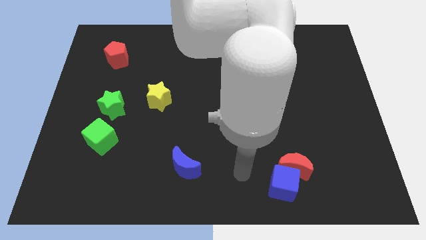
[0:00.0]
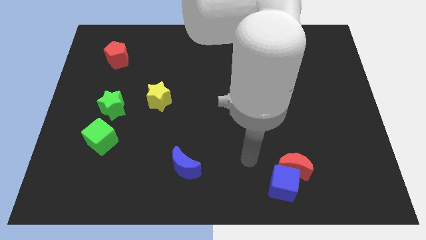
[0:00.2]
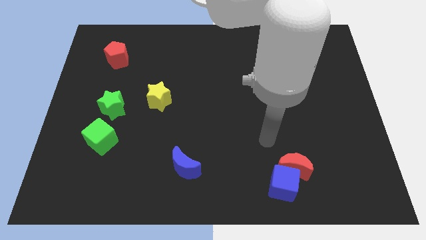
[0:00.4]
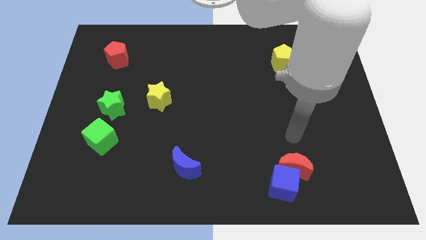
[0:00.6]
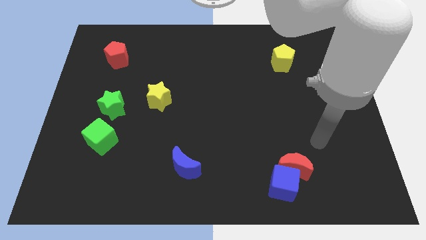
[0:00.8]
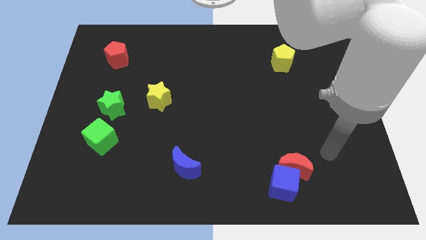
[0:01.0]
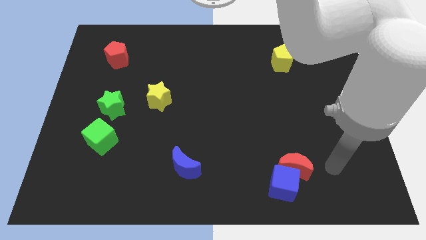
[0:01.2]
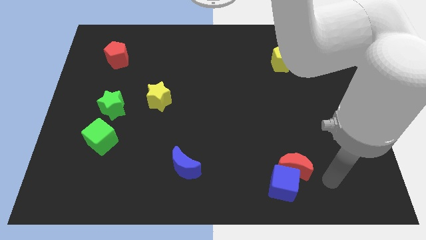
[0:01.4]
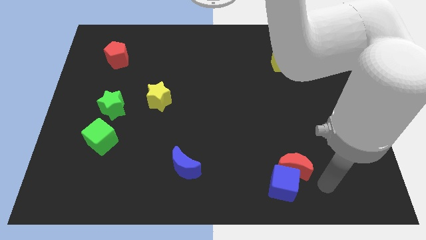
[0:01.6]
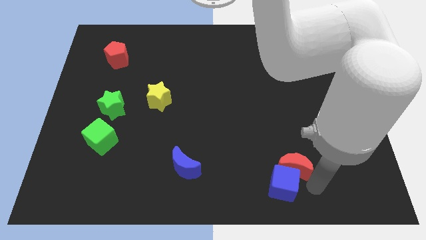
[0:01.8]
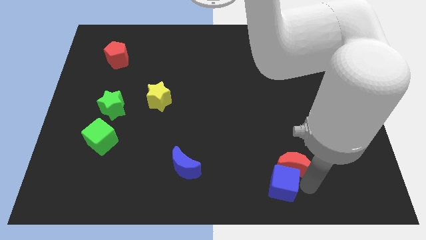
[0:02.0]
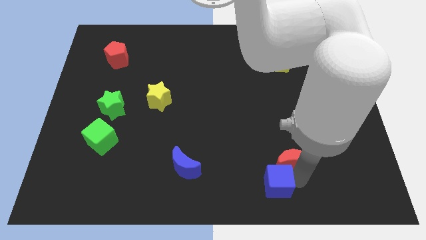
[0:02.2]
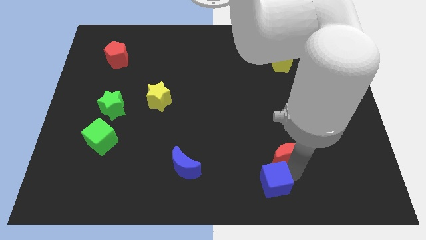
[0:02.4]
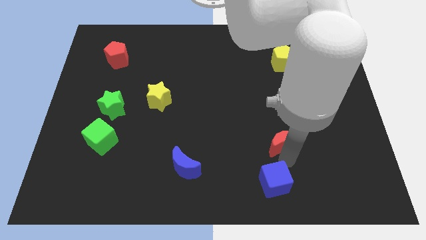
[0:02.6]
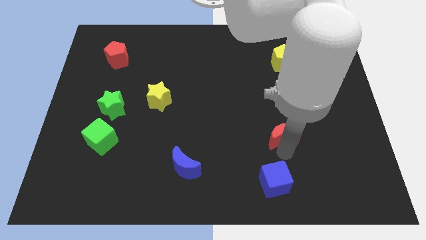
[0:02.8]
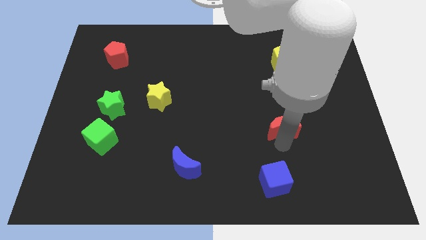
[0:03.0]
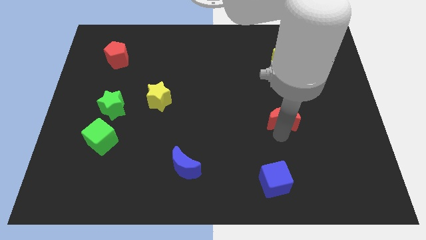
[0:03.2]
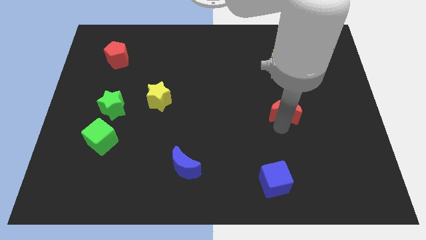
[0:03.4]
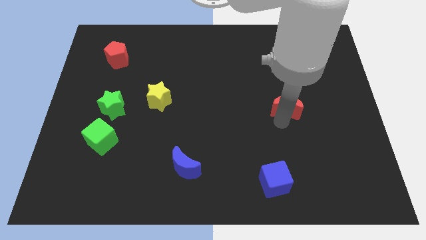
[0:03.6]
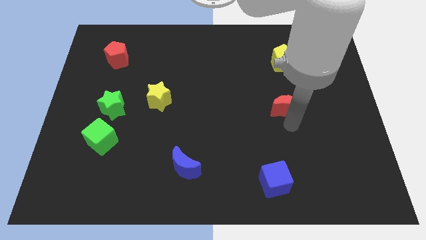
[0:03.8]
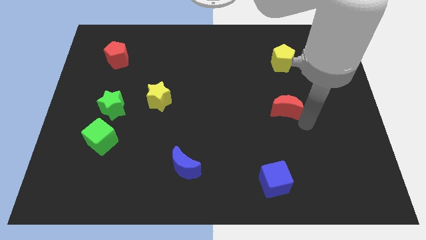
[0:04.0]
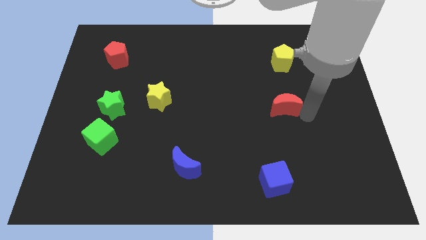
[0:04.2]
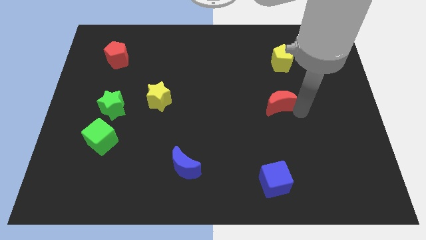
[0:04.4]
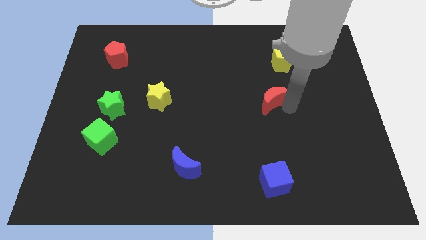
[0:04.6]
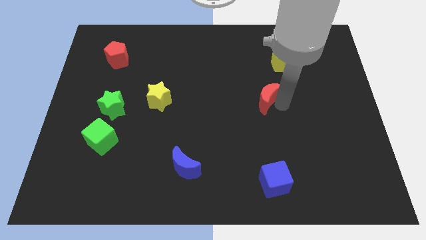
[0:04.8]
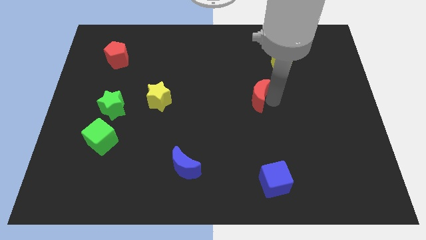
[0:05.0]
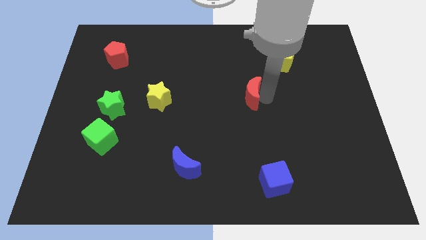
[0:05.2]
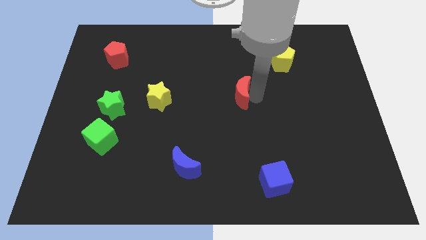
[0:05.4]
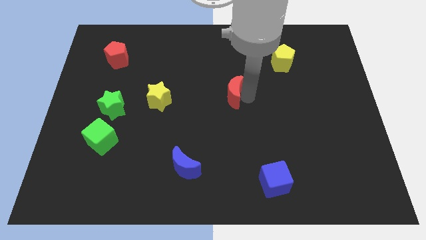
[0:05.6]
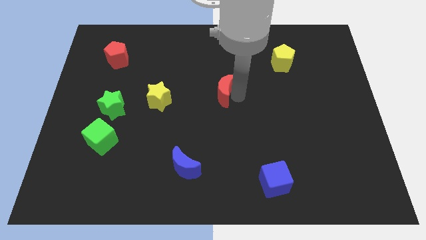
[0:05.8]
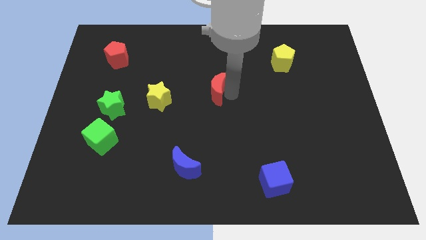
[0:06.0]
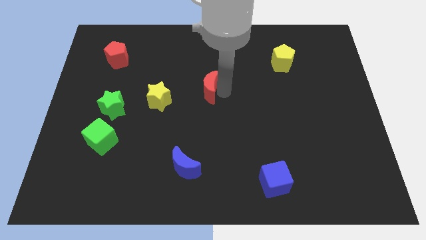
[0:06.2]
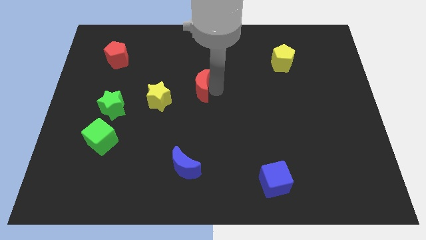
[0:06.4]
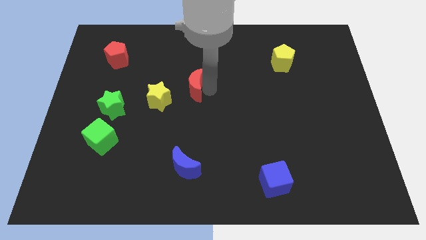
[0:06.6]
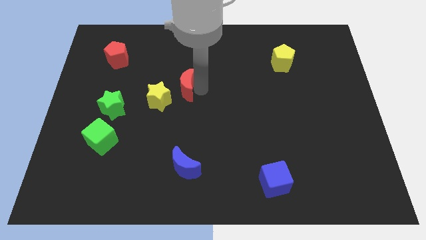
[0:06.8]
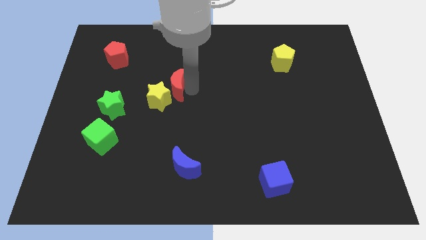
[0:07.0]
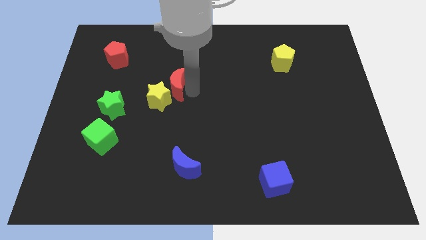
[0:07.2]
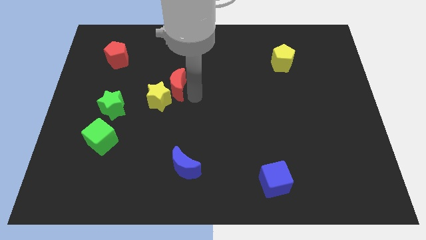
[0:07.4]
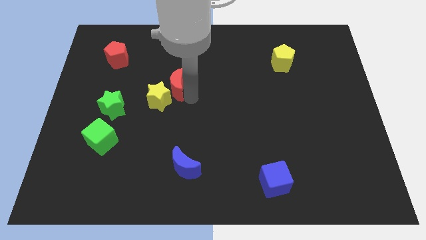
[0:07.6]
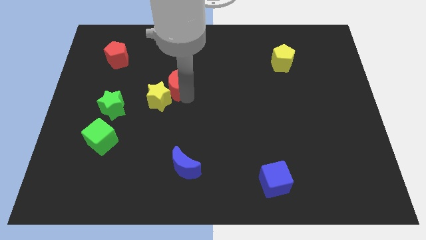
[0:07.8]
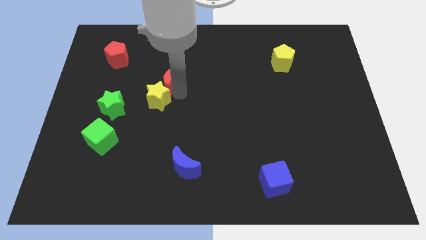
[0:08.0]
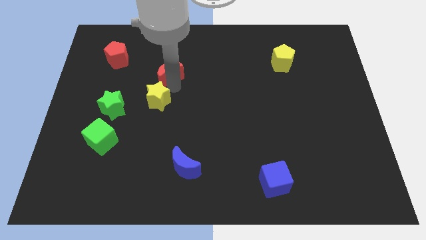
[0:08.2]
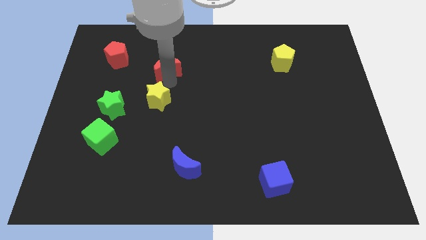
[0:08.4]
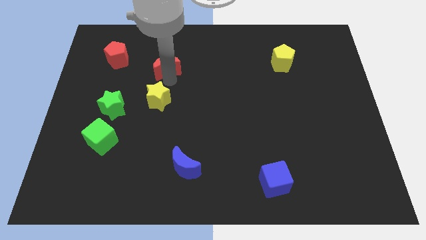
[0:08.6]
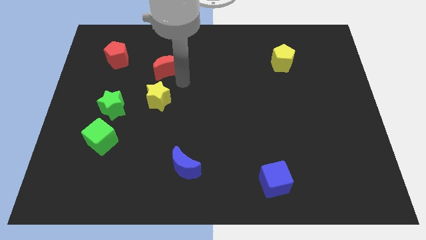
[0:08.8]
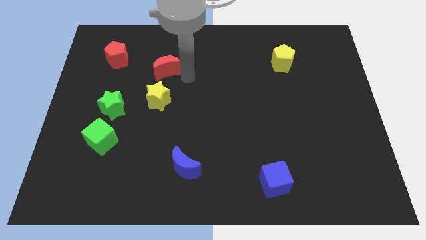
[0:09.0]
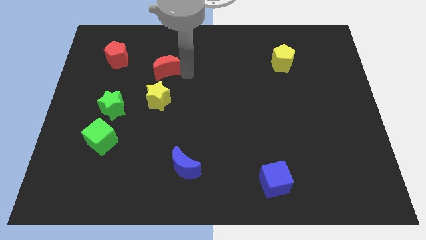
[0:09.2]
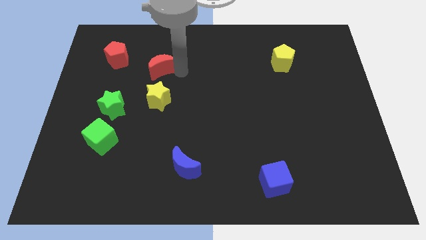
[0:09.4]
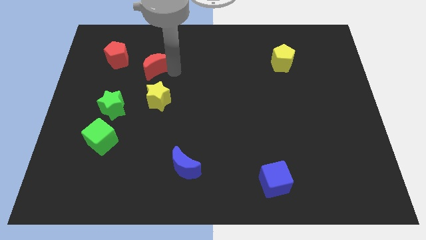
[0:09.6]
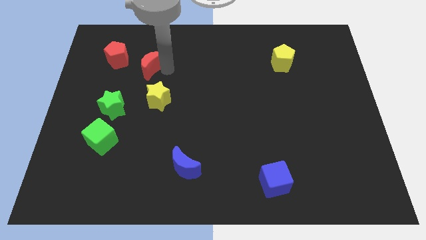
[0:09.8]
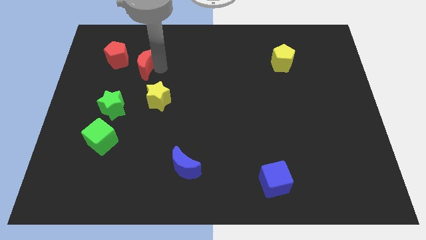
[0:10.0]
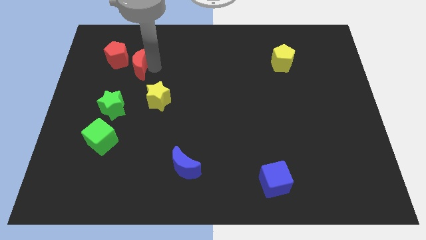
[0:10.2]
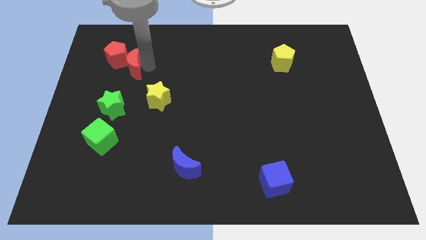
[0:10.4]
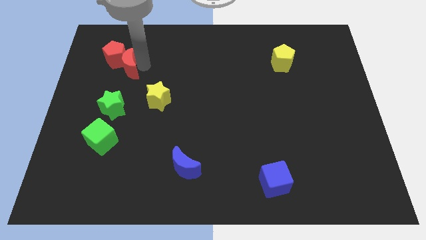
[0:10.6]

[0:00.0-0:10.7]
put the red moon close to the red pentagon

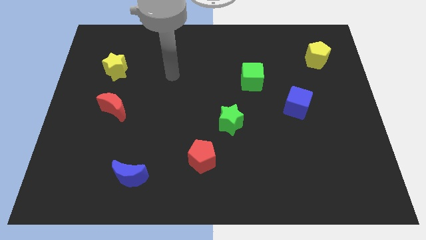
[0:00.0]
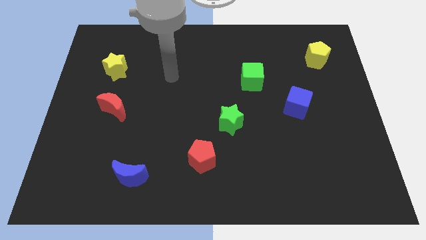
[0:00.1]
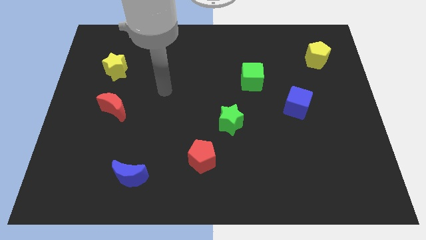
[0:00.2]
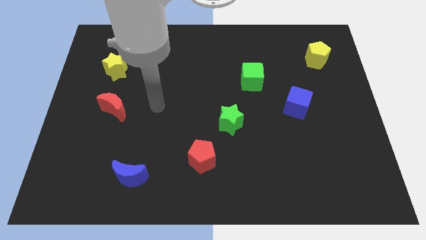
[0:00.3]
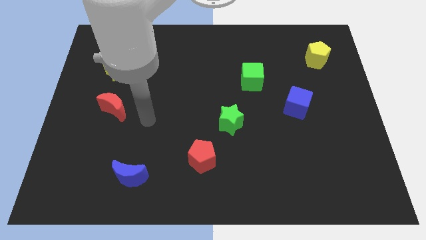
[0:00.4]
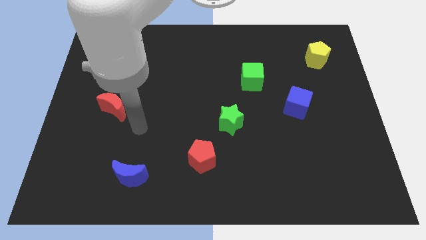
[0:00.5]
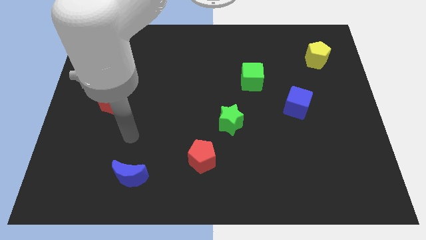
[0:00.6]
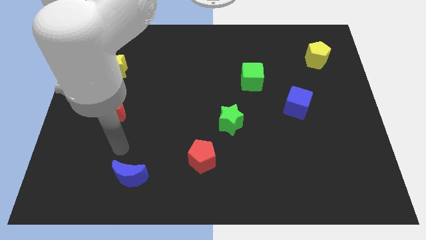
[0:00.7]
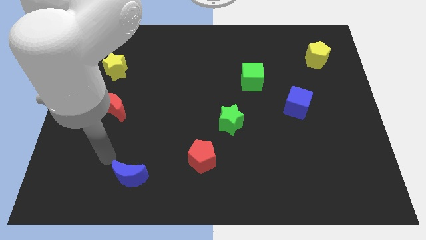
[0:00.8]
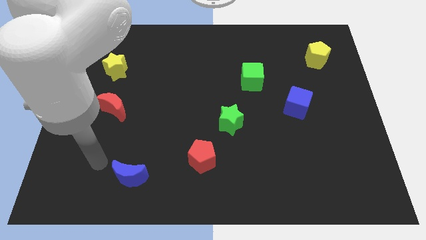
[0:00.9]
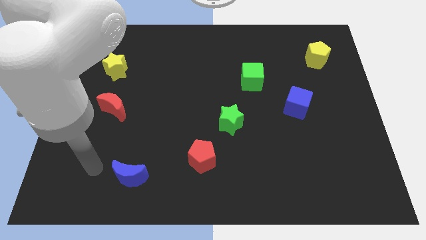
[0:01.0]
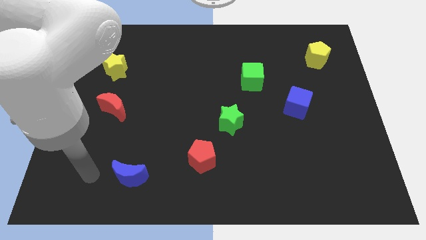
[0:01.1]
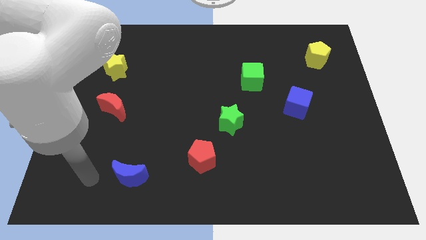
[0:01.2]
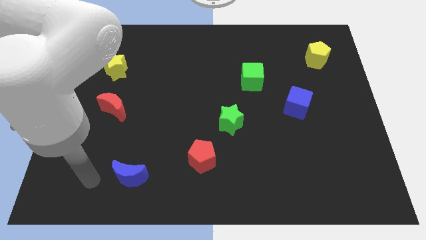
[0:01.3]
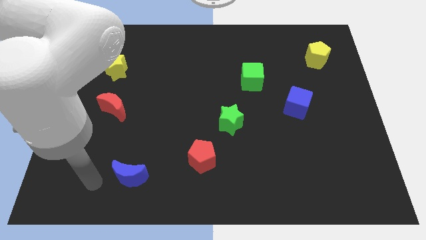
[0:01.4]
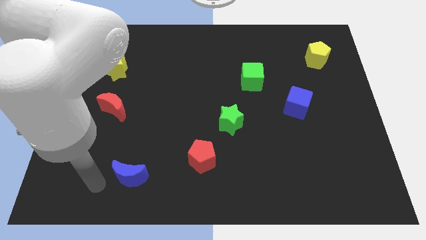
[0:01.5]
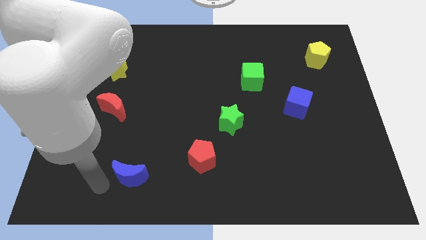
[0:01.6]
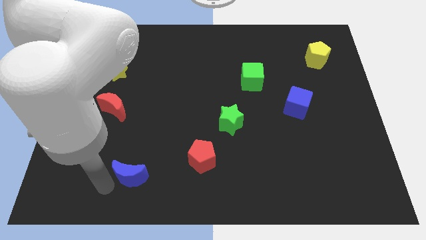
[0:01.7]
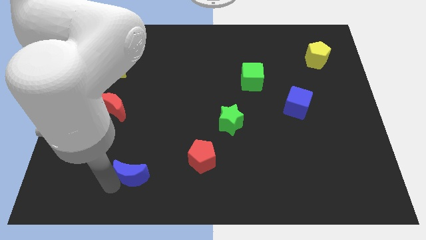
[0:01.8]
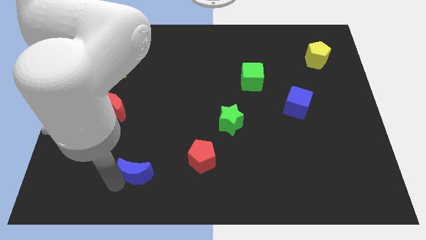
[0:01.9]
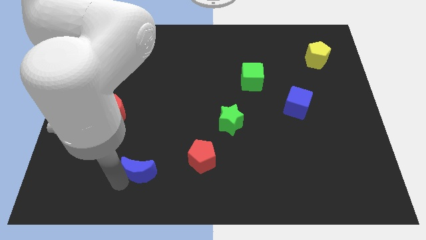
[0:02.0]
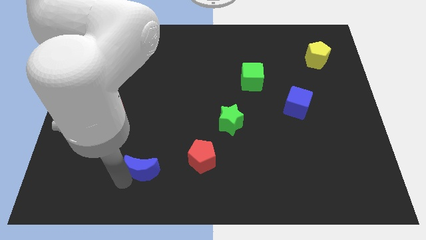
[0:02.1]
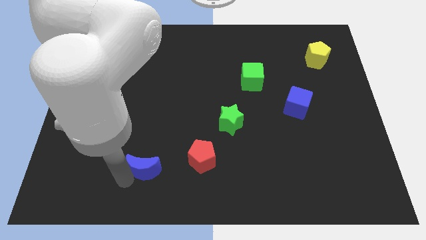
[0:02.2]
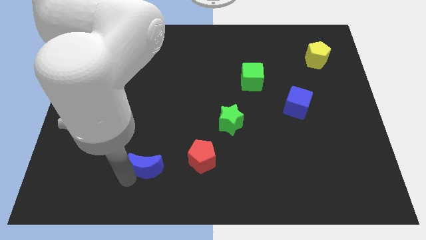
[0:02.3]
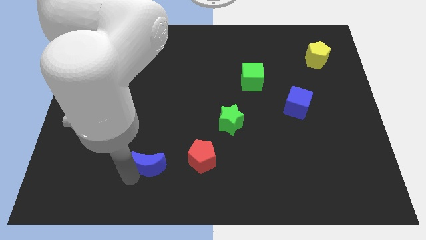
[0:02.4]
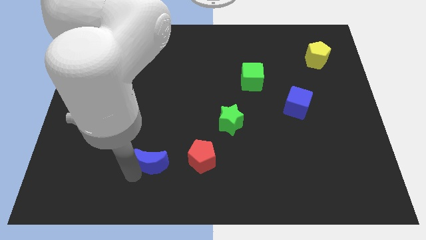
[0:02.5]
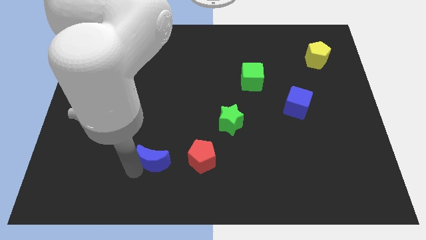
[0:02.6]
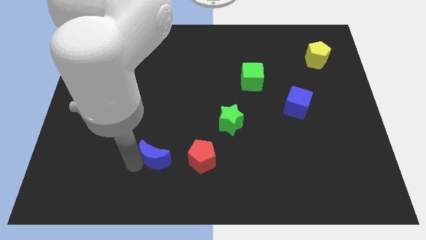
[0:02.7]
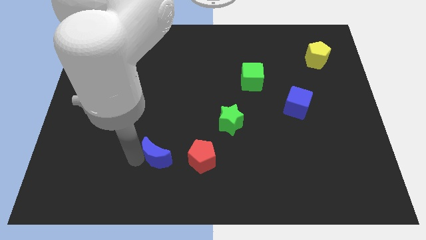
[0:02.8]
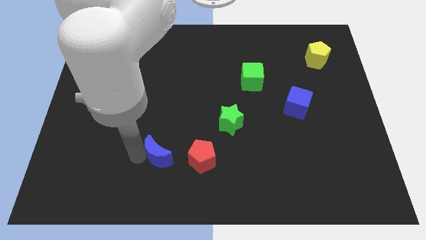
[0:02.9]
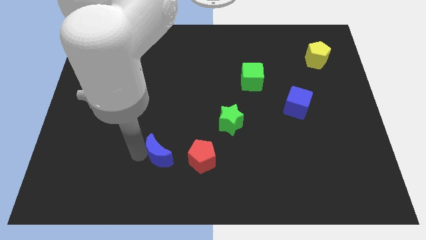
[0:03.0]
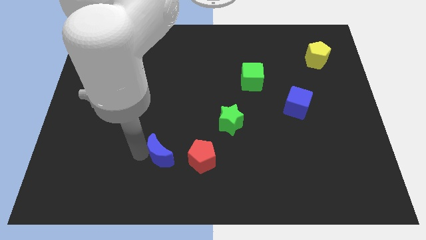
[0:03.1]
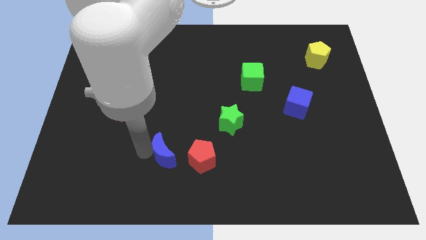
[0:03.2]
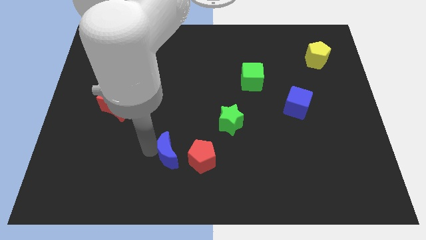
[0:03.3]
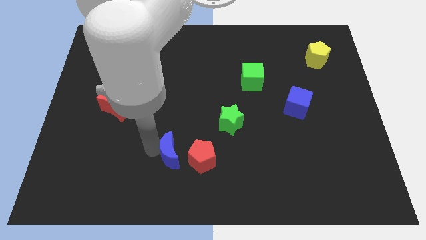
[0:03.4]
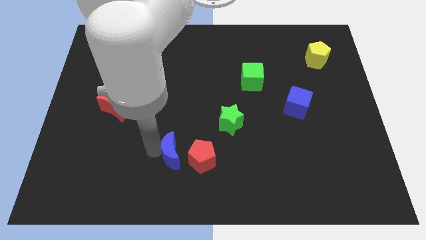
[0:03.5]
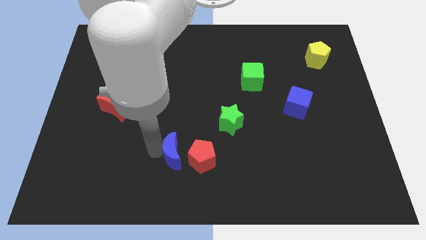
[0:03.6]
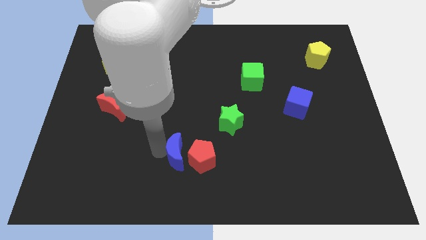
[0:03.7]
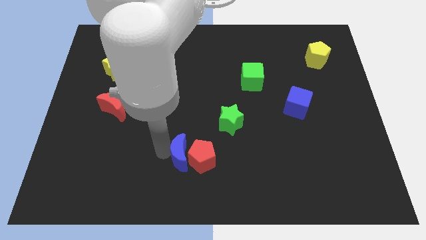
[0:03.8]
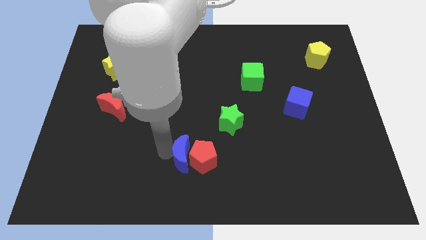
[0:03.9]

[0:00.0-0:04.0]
move the blue moon towards the red pentagon
